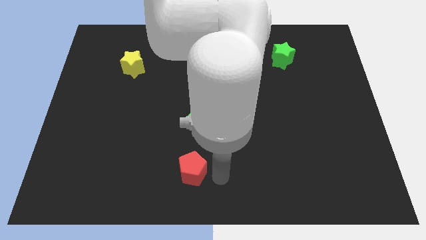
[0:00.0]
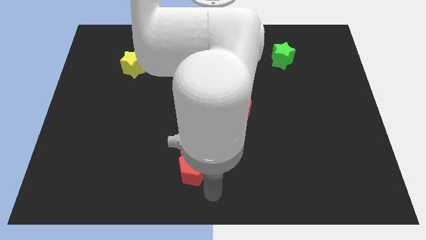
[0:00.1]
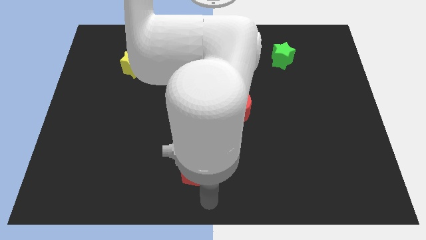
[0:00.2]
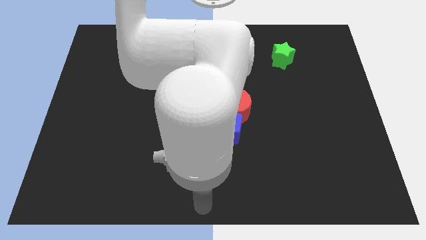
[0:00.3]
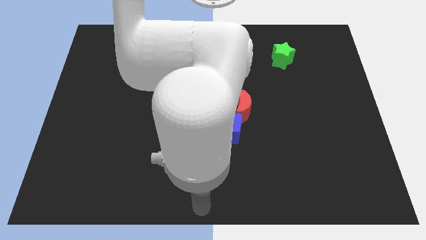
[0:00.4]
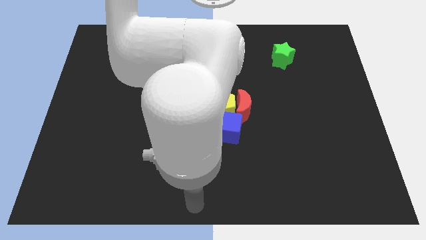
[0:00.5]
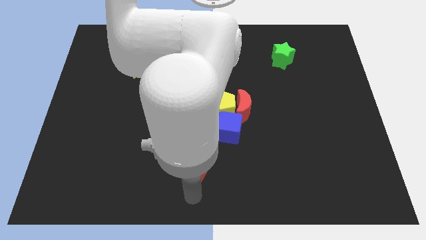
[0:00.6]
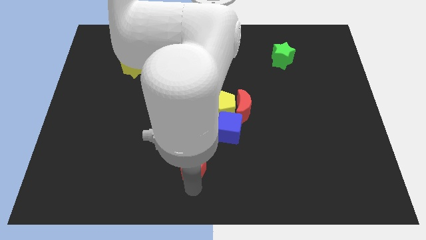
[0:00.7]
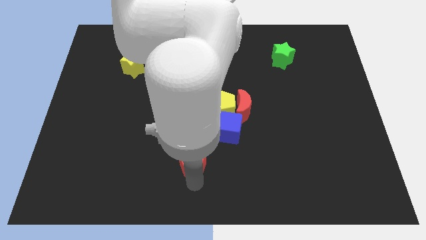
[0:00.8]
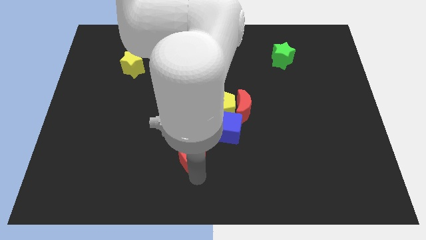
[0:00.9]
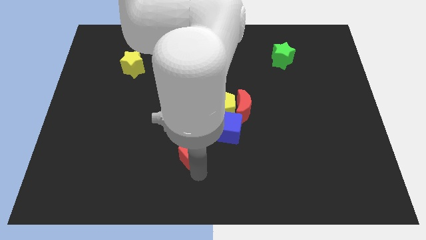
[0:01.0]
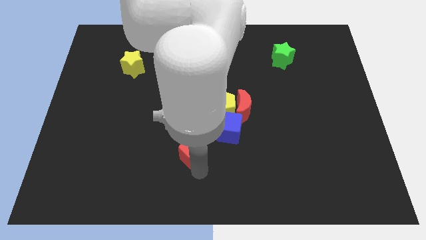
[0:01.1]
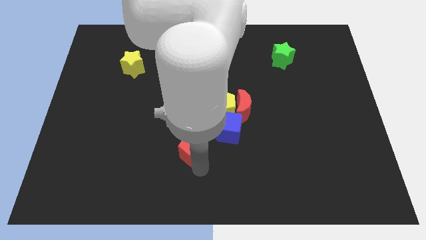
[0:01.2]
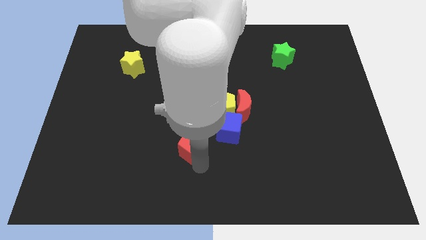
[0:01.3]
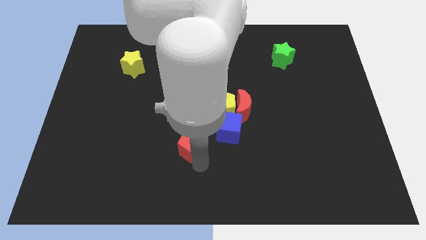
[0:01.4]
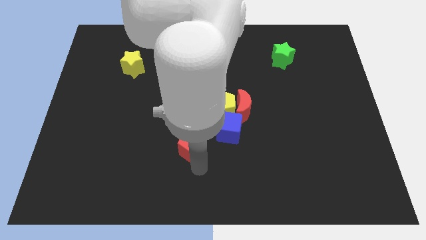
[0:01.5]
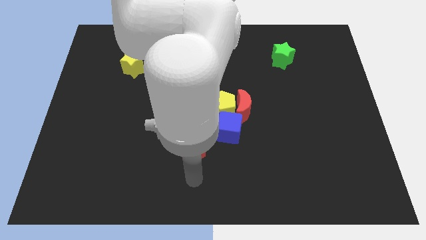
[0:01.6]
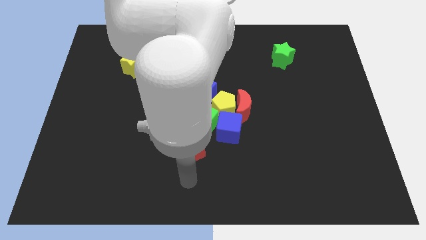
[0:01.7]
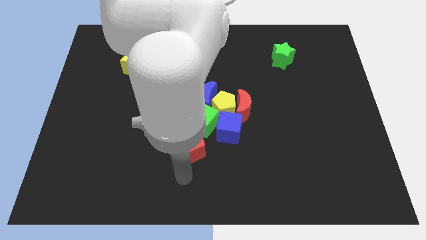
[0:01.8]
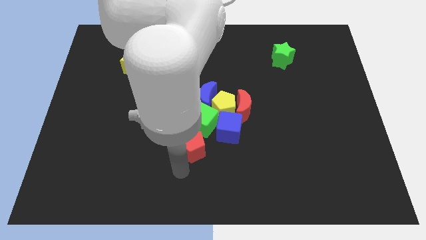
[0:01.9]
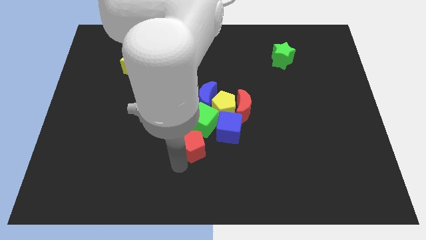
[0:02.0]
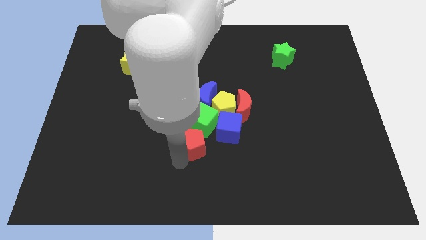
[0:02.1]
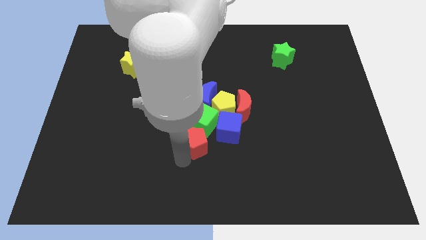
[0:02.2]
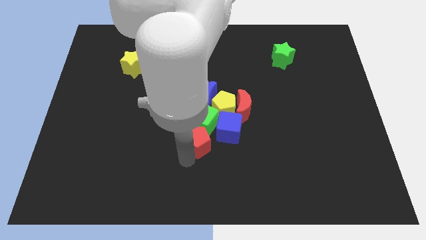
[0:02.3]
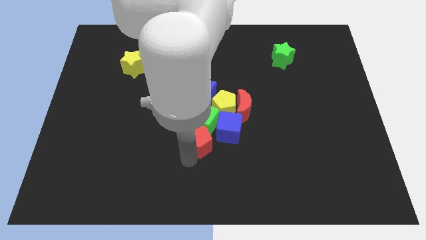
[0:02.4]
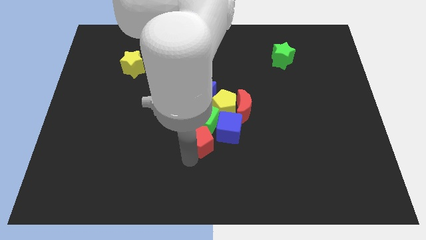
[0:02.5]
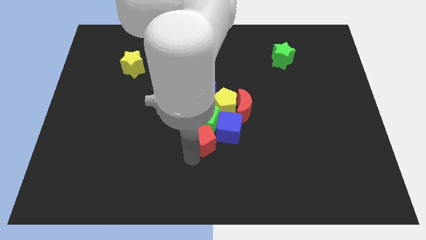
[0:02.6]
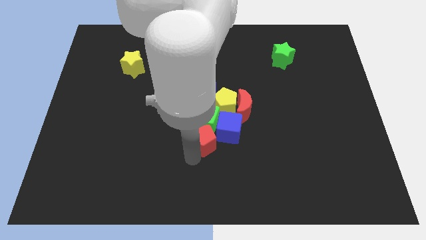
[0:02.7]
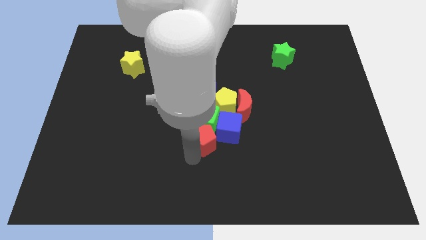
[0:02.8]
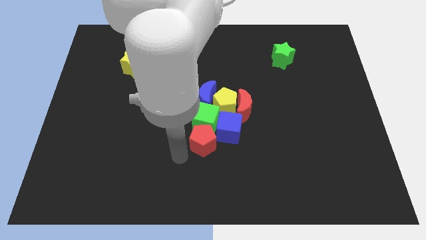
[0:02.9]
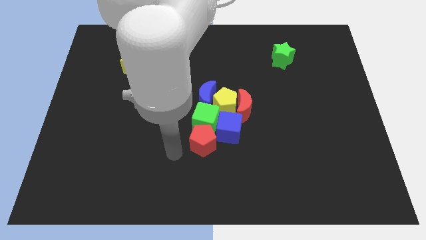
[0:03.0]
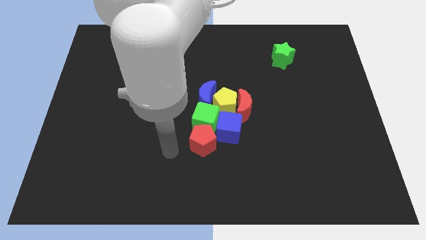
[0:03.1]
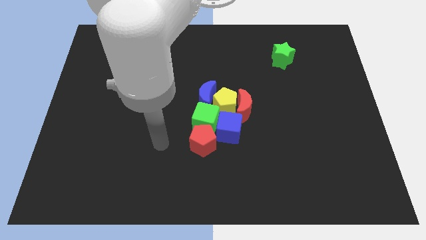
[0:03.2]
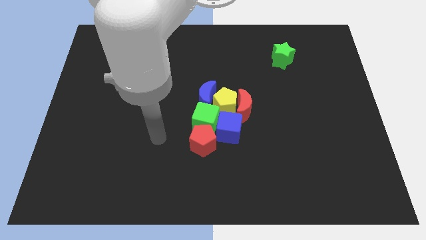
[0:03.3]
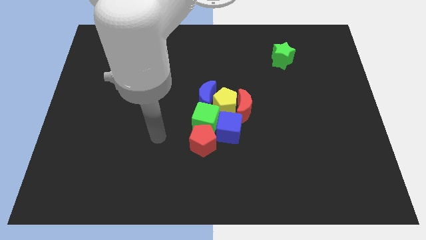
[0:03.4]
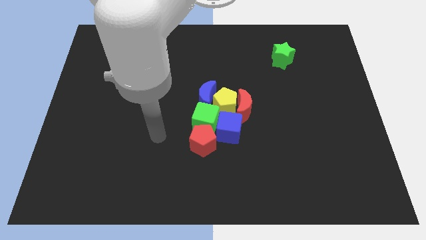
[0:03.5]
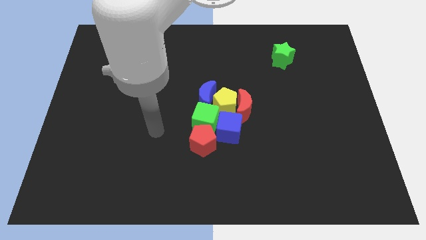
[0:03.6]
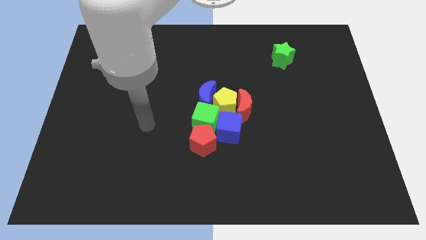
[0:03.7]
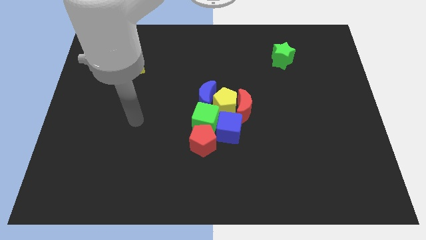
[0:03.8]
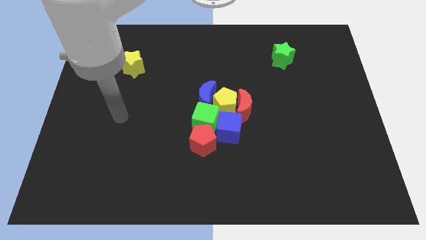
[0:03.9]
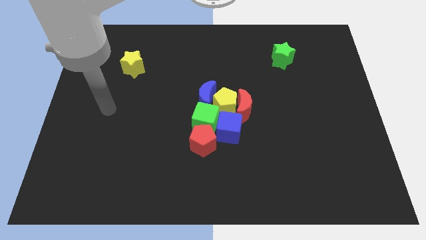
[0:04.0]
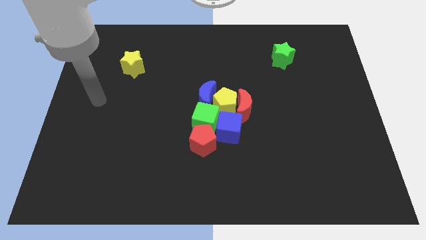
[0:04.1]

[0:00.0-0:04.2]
push the red pentagon into the group of blocks

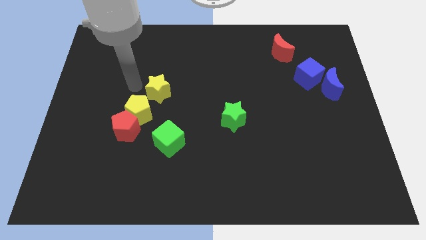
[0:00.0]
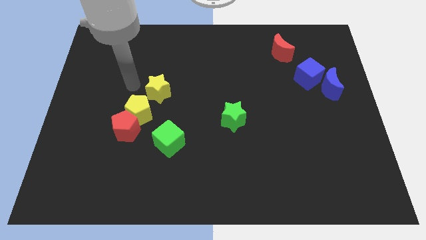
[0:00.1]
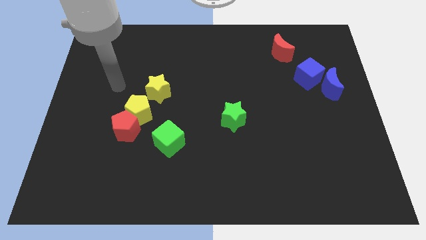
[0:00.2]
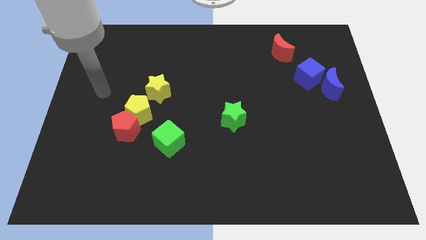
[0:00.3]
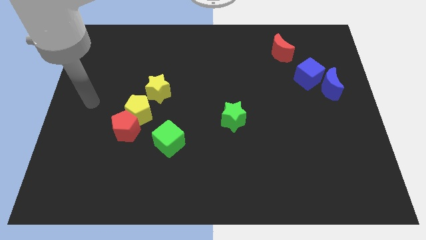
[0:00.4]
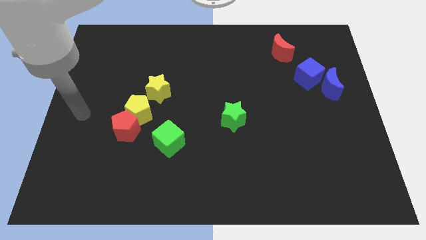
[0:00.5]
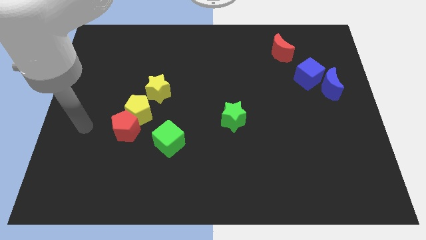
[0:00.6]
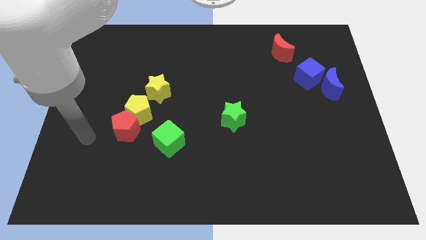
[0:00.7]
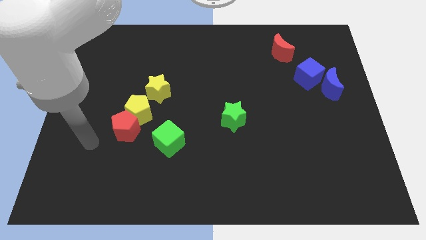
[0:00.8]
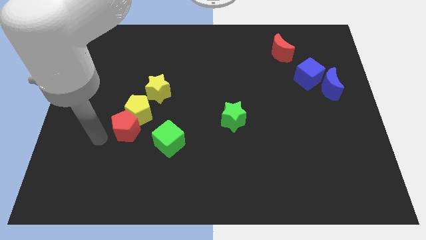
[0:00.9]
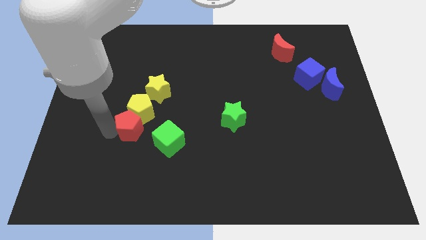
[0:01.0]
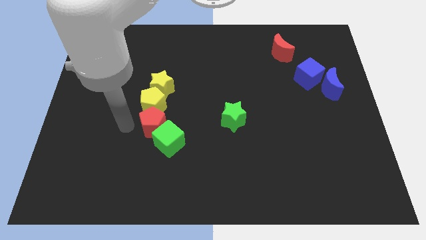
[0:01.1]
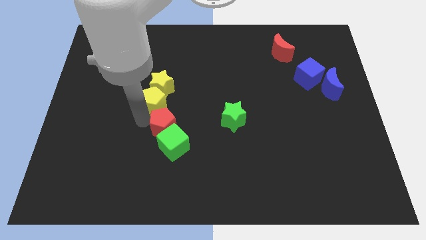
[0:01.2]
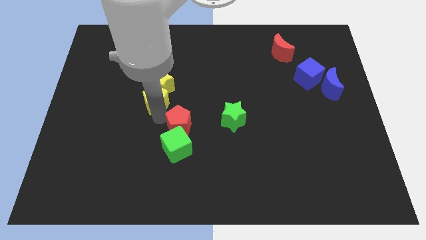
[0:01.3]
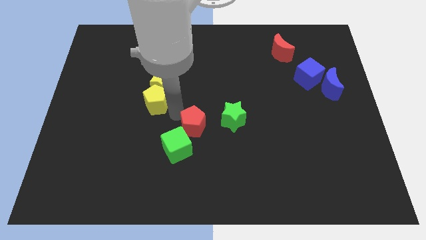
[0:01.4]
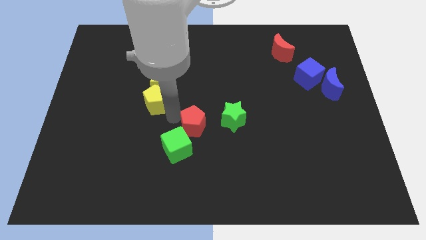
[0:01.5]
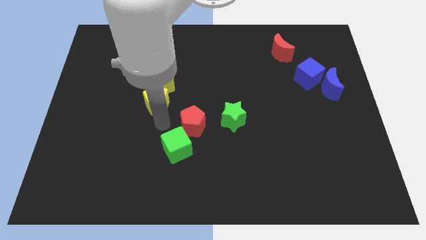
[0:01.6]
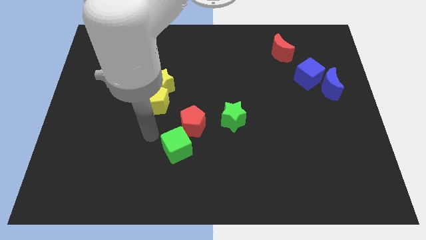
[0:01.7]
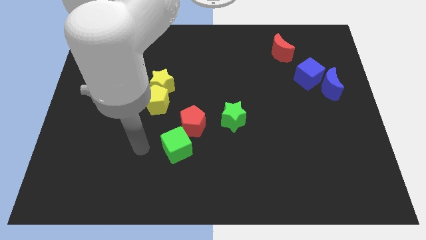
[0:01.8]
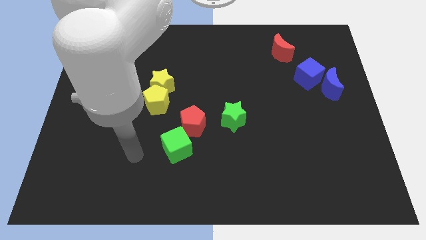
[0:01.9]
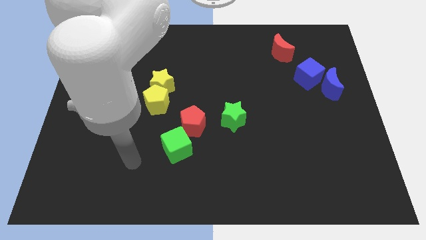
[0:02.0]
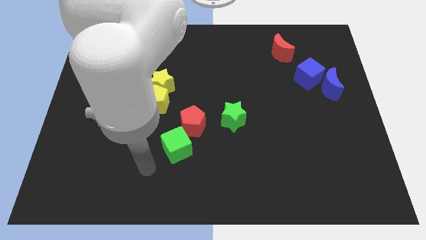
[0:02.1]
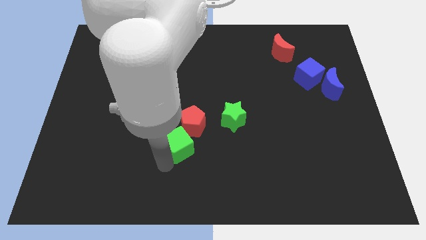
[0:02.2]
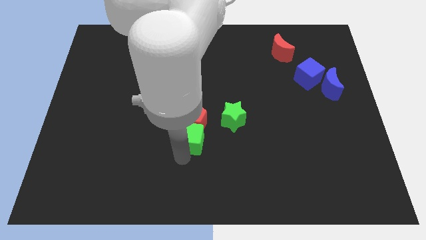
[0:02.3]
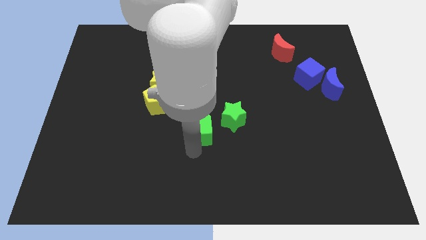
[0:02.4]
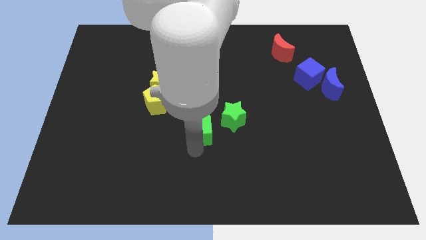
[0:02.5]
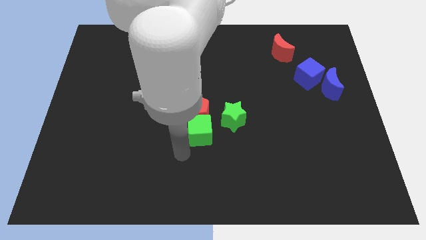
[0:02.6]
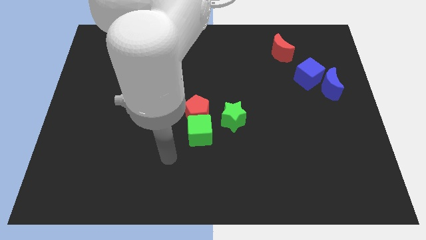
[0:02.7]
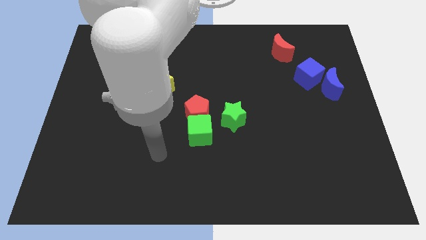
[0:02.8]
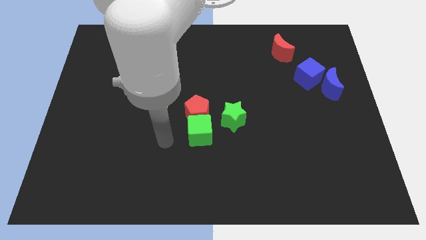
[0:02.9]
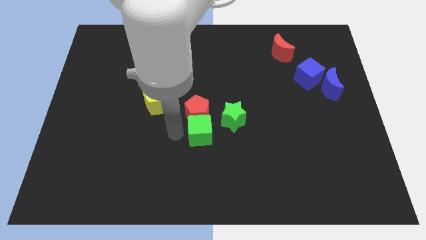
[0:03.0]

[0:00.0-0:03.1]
push the red pentagon to the top side of the green cube

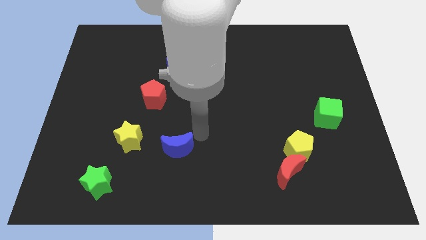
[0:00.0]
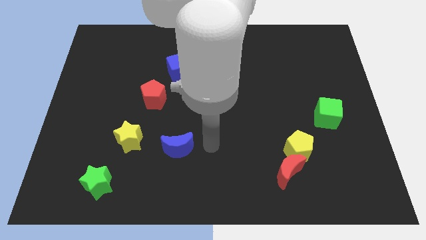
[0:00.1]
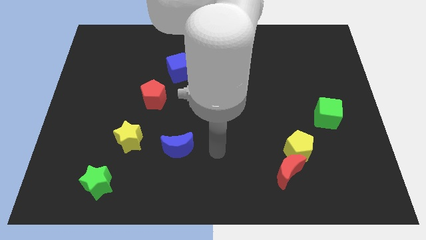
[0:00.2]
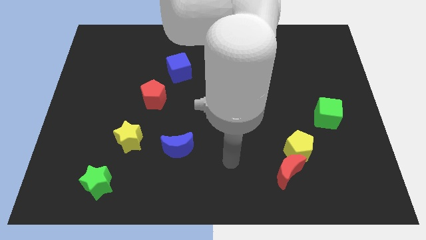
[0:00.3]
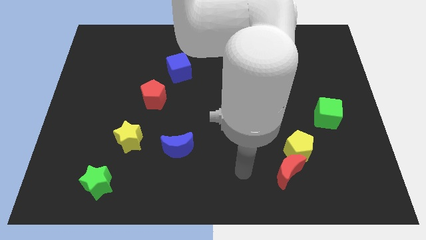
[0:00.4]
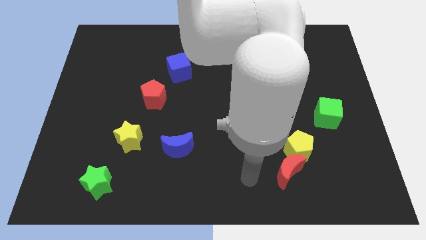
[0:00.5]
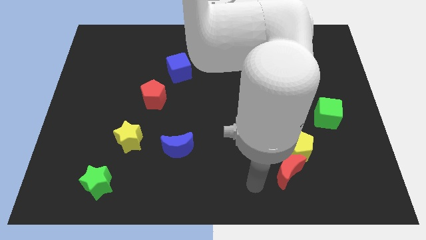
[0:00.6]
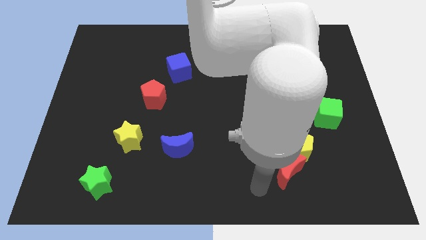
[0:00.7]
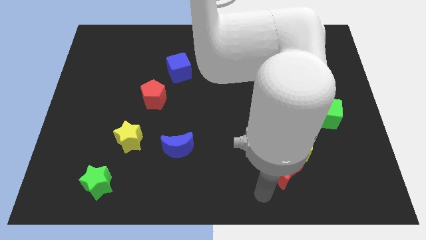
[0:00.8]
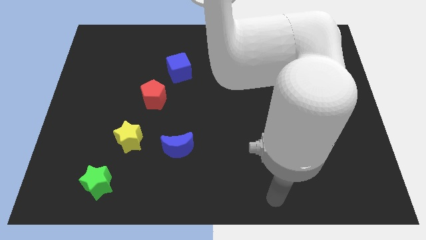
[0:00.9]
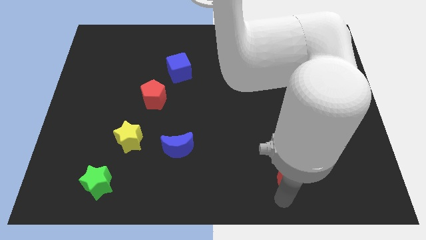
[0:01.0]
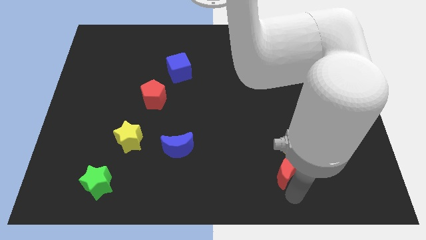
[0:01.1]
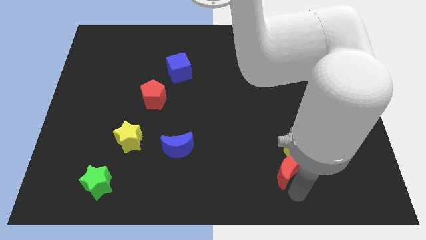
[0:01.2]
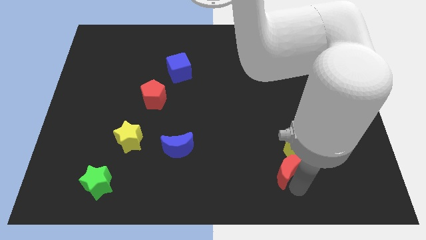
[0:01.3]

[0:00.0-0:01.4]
place your arm at the bottom of the red crescent

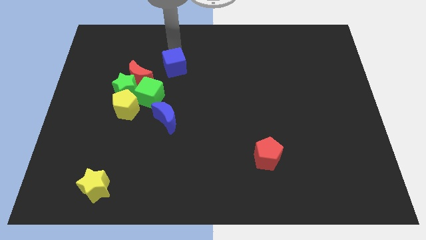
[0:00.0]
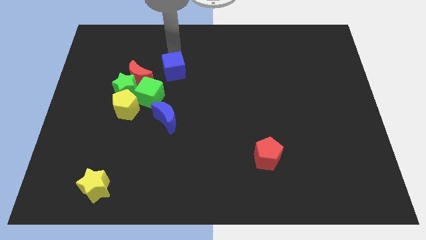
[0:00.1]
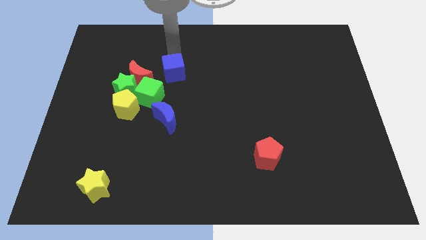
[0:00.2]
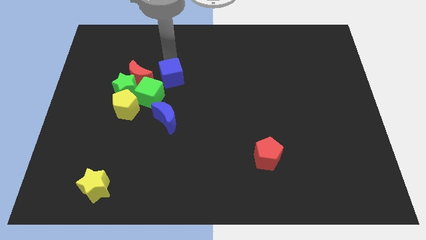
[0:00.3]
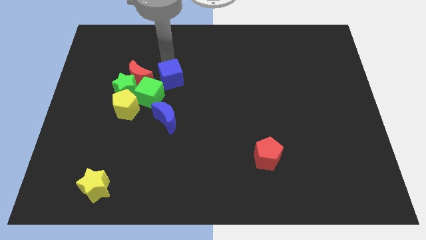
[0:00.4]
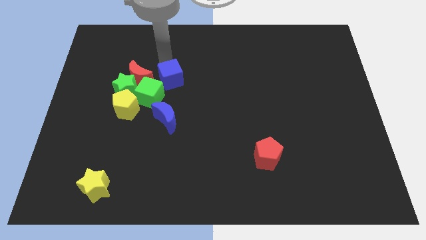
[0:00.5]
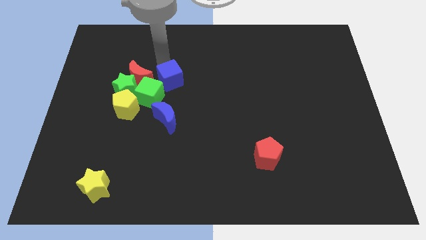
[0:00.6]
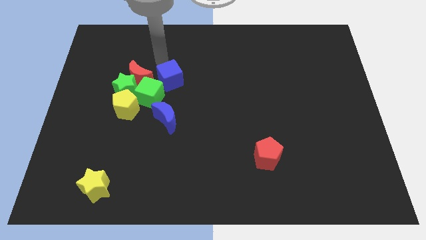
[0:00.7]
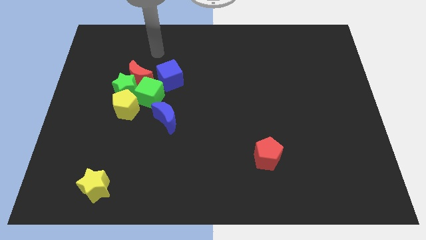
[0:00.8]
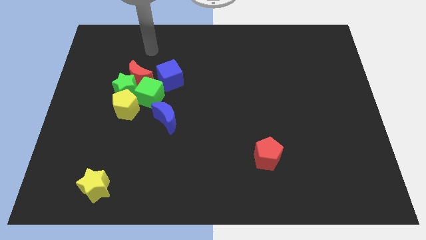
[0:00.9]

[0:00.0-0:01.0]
place blue cube right to the red crescent
